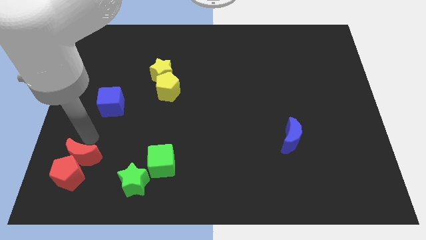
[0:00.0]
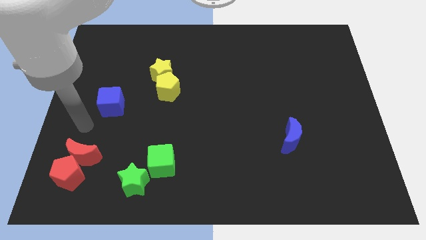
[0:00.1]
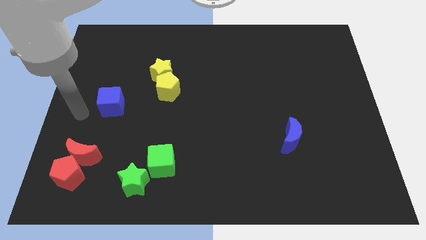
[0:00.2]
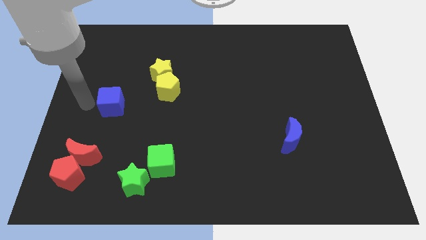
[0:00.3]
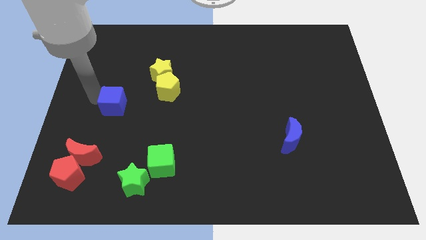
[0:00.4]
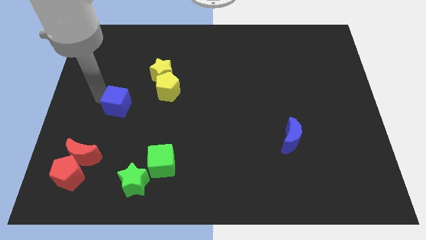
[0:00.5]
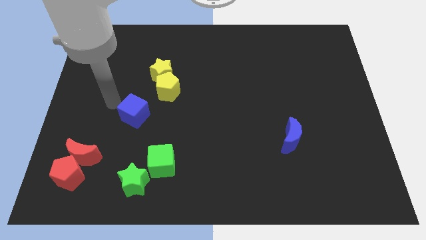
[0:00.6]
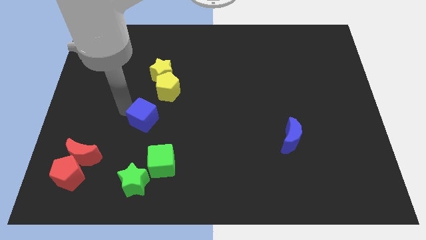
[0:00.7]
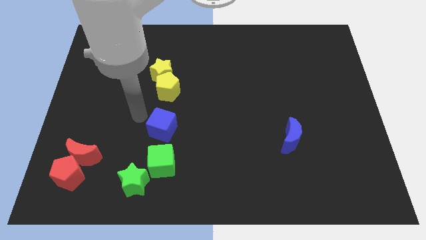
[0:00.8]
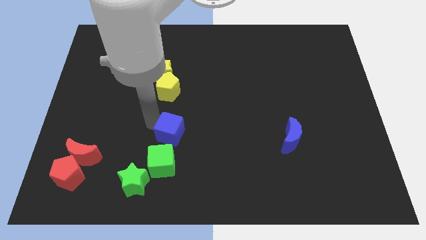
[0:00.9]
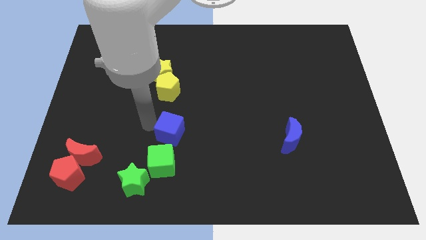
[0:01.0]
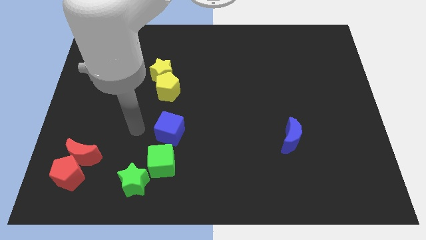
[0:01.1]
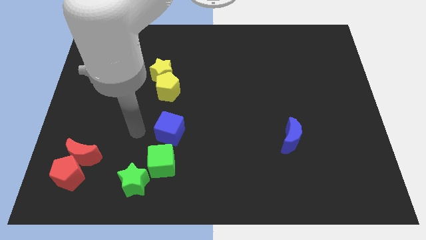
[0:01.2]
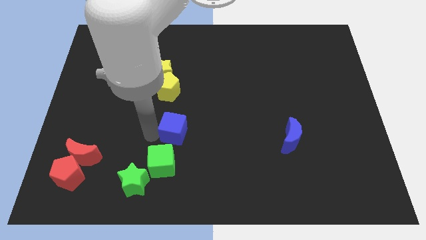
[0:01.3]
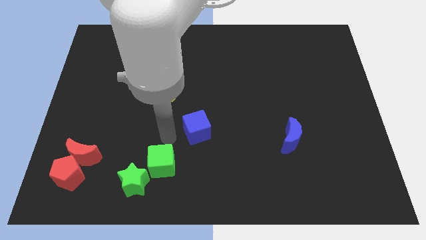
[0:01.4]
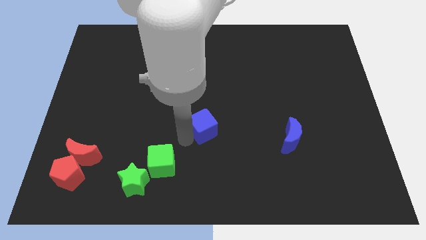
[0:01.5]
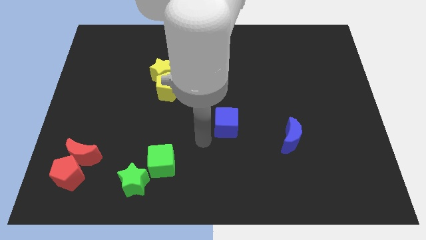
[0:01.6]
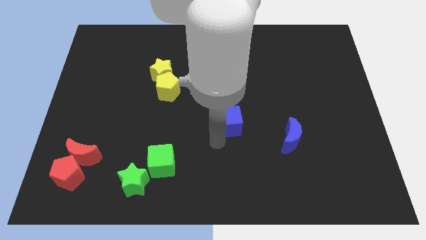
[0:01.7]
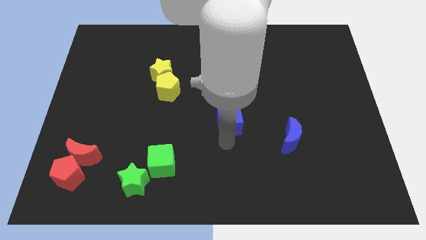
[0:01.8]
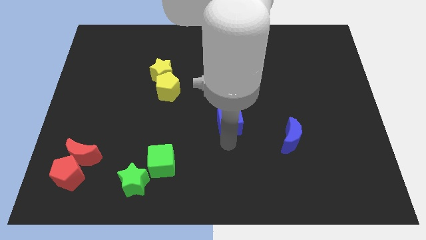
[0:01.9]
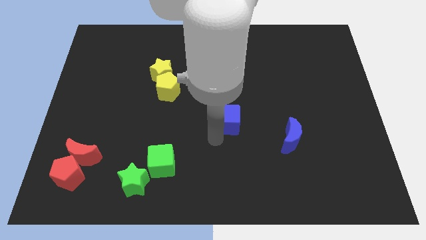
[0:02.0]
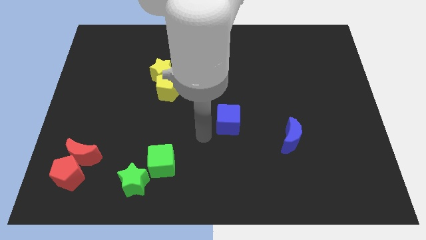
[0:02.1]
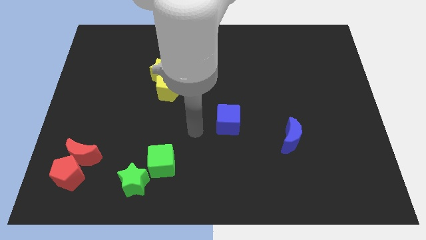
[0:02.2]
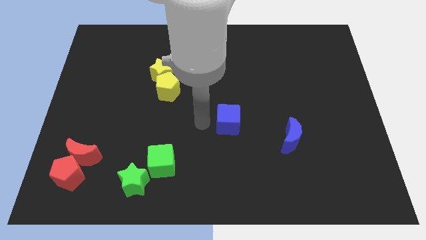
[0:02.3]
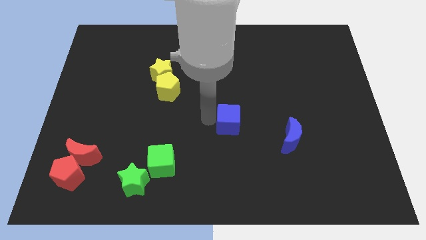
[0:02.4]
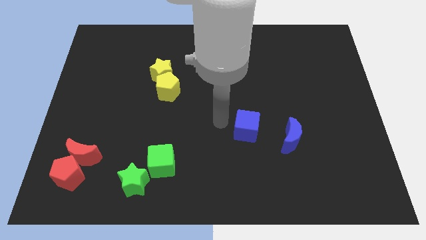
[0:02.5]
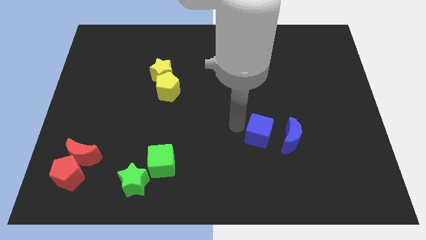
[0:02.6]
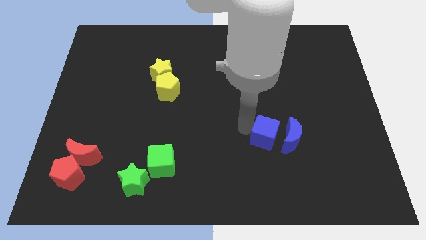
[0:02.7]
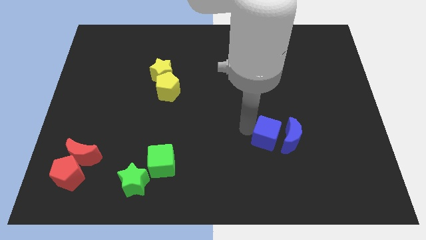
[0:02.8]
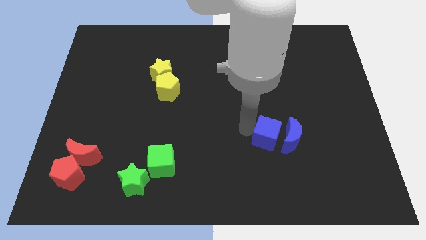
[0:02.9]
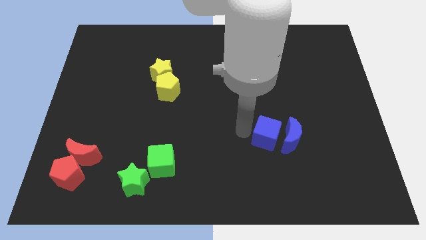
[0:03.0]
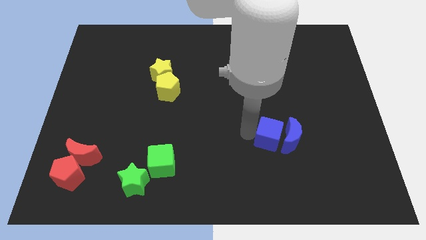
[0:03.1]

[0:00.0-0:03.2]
move the blue cube to the left of the blue crescent

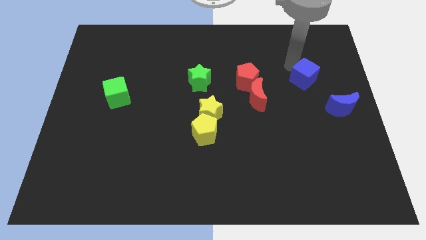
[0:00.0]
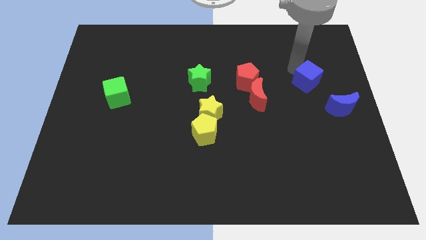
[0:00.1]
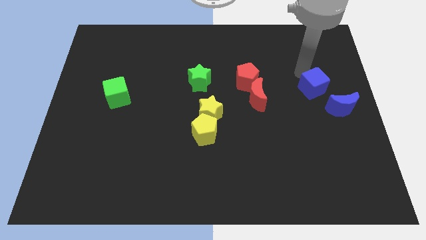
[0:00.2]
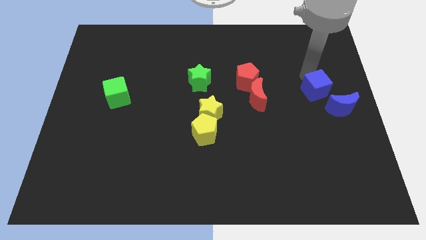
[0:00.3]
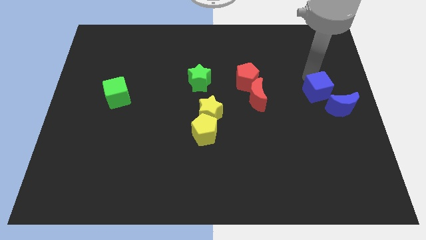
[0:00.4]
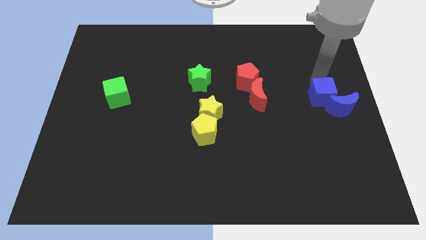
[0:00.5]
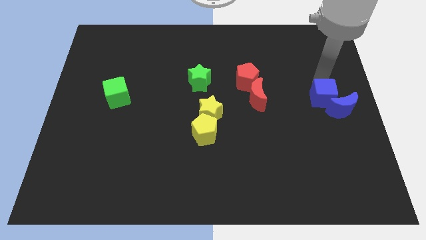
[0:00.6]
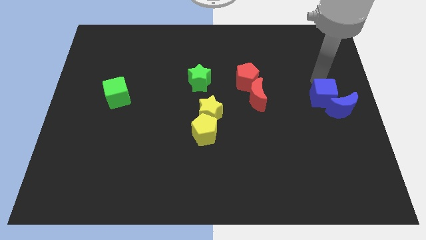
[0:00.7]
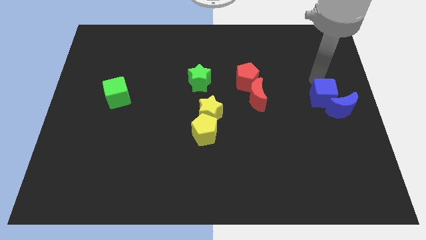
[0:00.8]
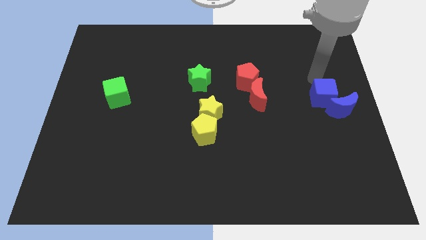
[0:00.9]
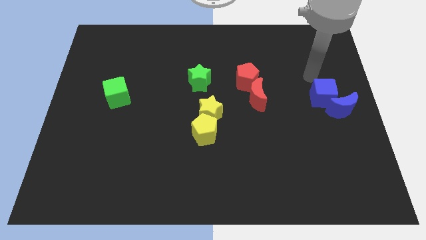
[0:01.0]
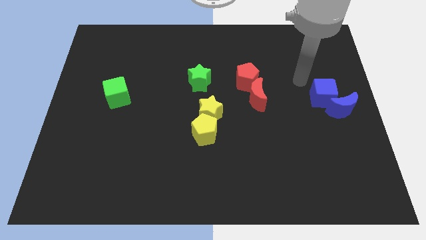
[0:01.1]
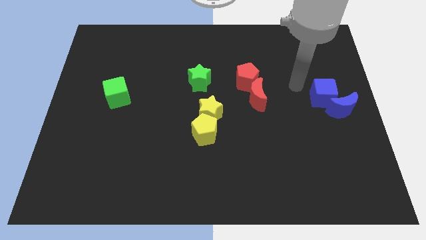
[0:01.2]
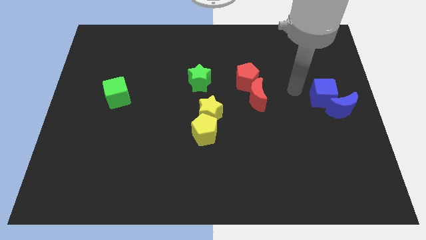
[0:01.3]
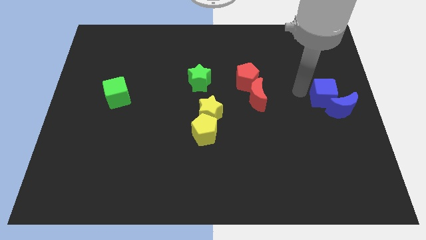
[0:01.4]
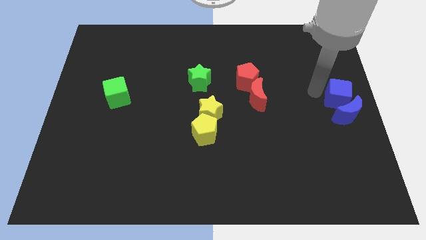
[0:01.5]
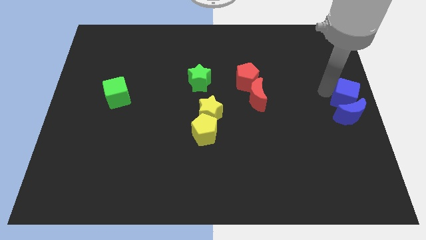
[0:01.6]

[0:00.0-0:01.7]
push the blue cube into the blue crescent

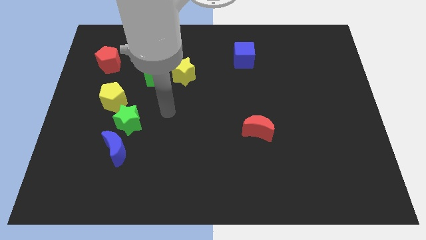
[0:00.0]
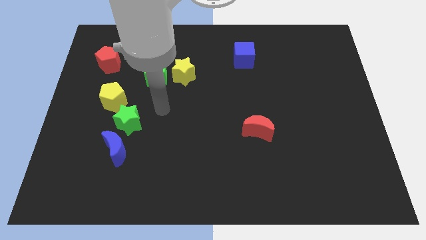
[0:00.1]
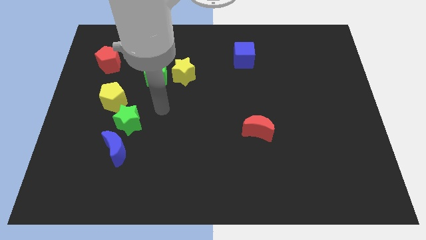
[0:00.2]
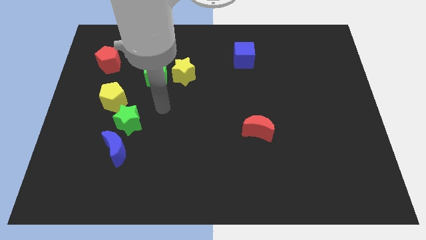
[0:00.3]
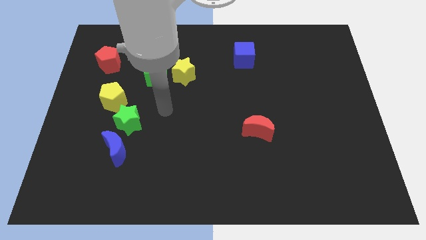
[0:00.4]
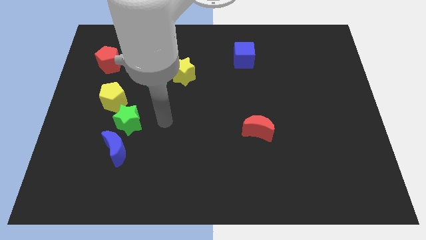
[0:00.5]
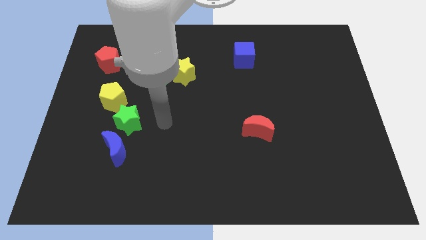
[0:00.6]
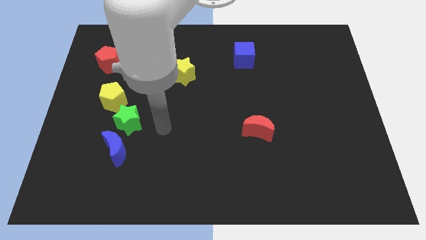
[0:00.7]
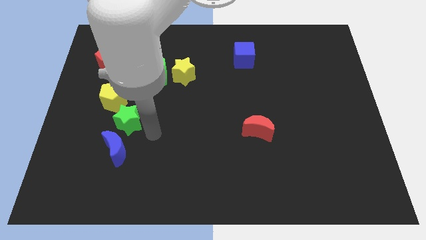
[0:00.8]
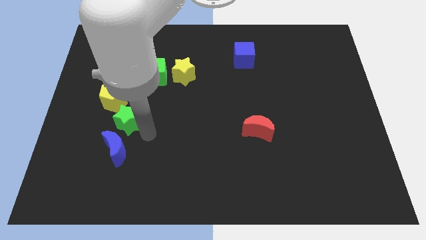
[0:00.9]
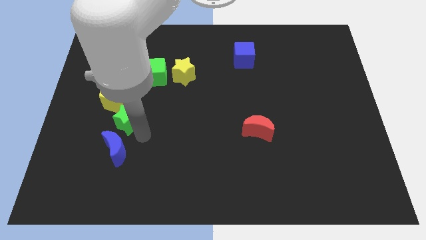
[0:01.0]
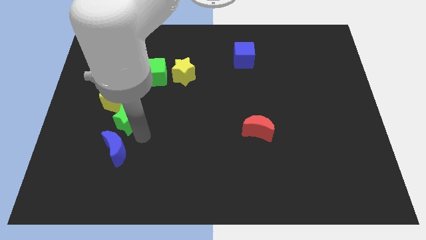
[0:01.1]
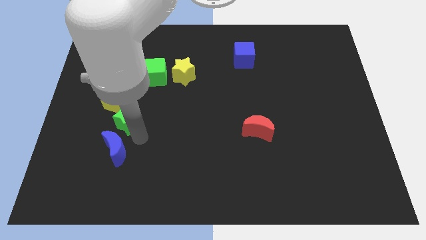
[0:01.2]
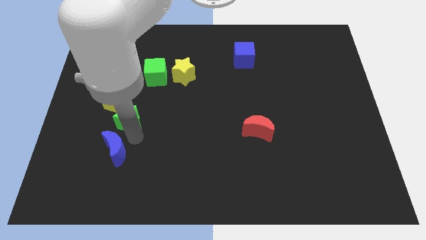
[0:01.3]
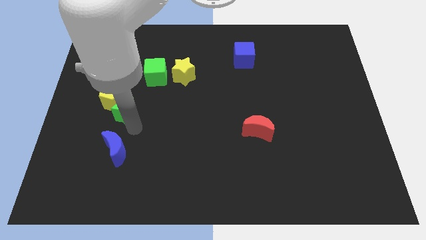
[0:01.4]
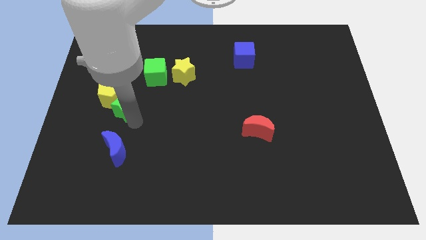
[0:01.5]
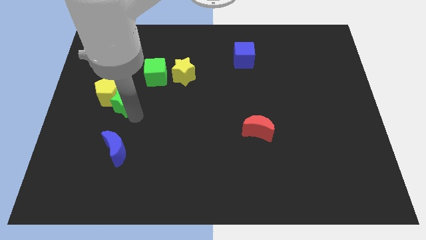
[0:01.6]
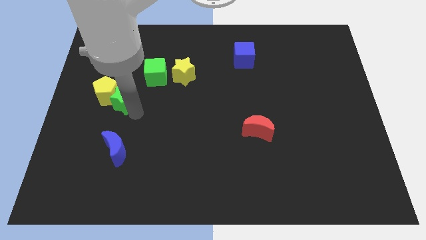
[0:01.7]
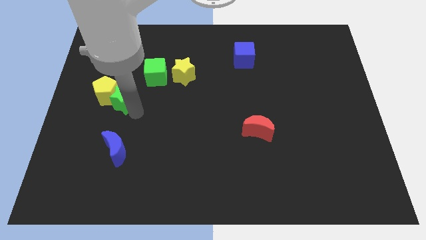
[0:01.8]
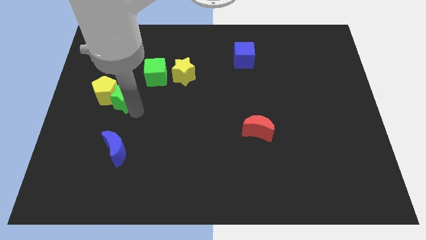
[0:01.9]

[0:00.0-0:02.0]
push green star into yellow pentagon

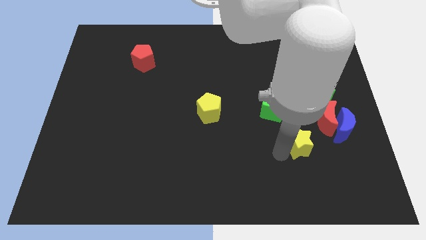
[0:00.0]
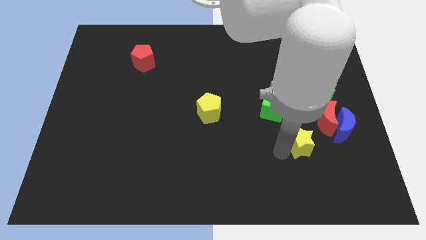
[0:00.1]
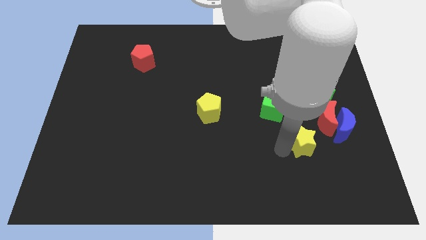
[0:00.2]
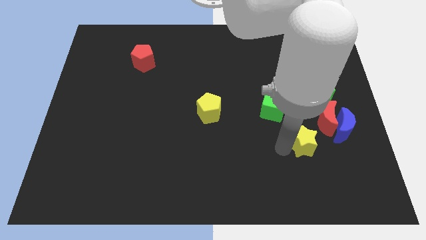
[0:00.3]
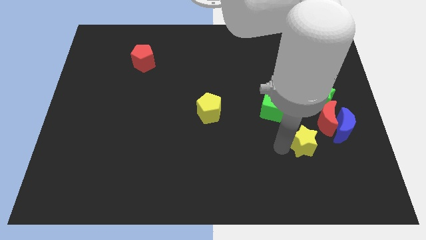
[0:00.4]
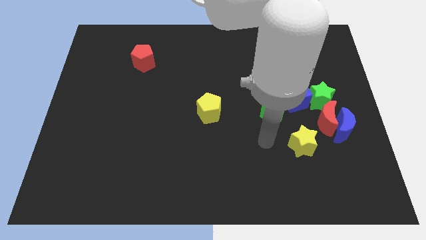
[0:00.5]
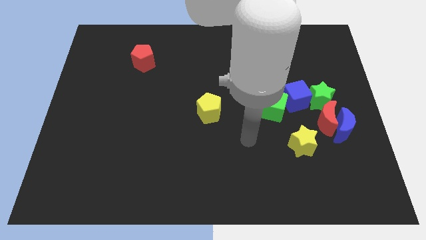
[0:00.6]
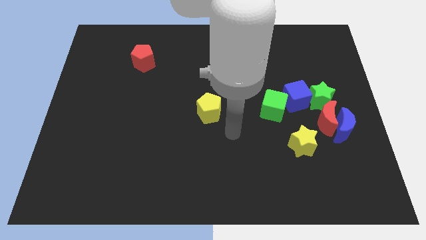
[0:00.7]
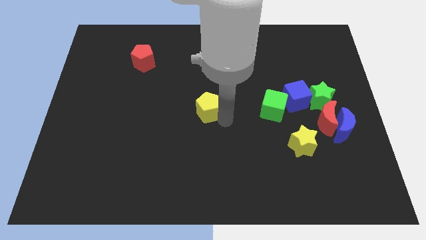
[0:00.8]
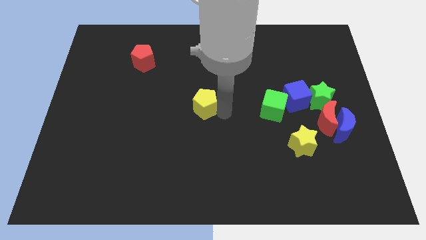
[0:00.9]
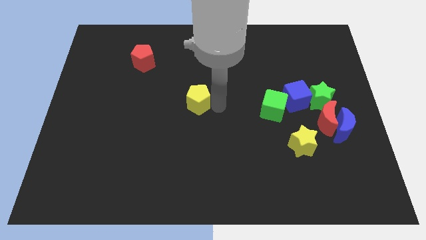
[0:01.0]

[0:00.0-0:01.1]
push yellow pentagon to the center

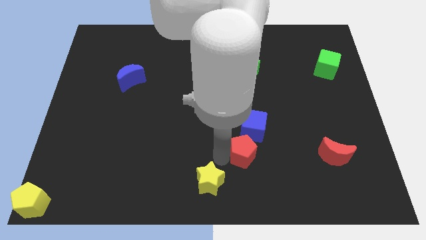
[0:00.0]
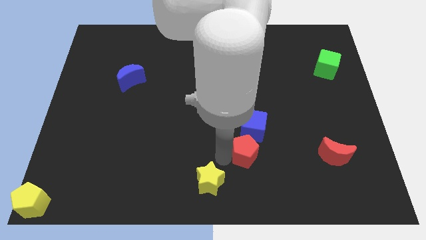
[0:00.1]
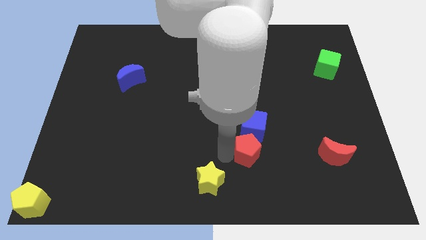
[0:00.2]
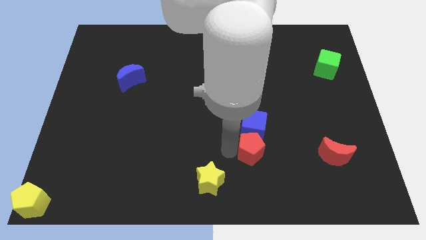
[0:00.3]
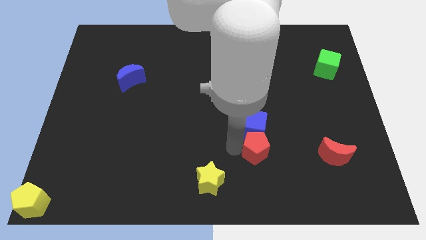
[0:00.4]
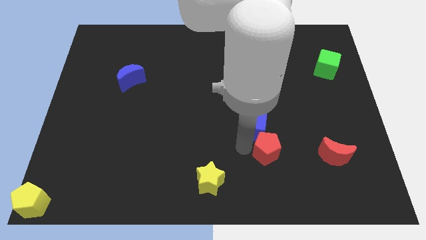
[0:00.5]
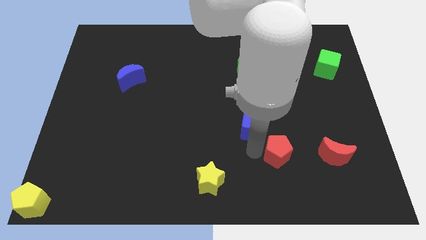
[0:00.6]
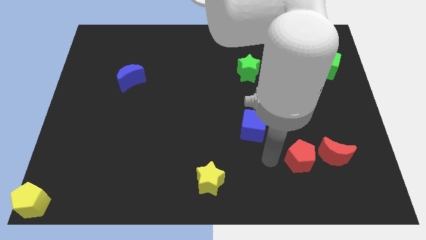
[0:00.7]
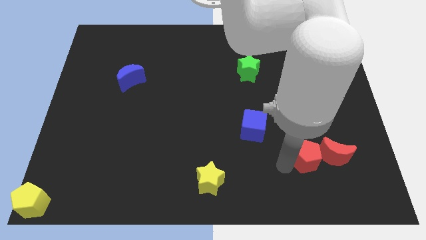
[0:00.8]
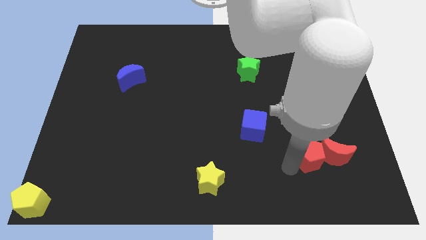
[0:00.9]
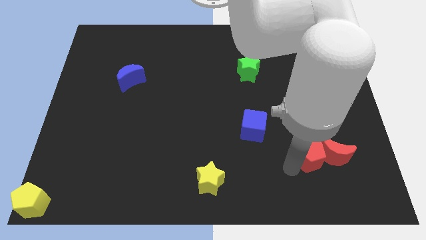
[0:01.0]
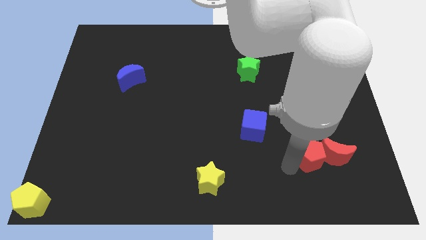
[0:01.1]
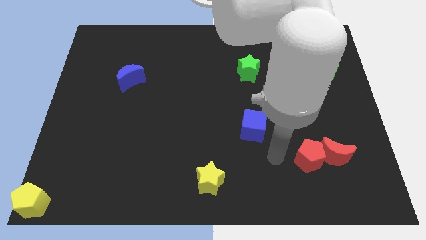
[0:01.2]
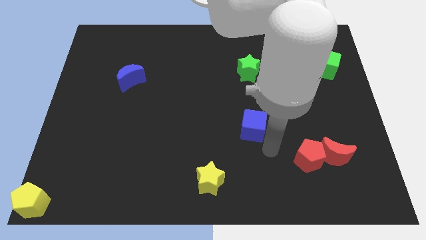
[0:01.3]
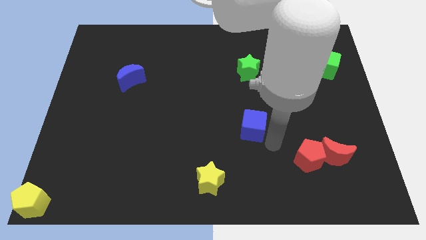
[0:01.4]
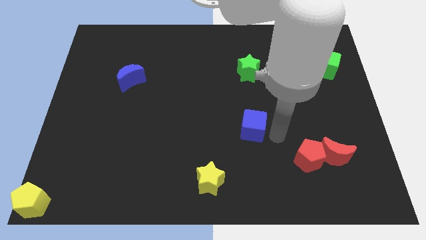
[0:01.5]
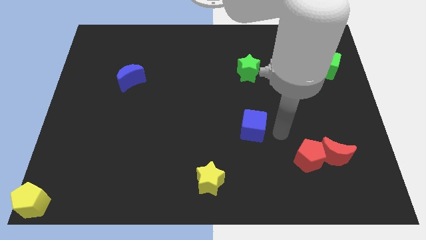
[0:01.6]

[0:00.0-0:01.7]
move the red pentagon left to the red crescent
